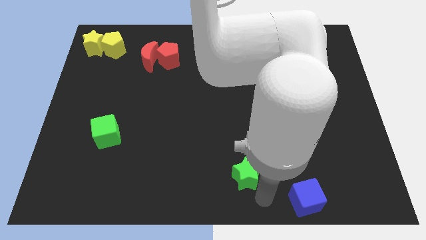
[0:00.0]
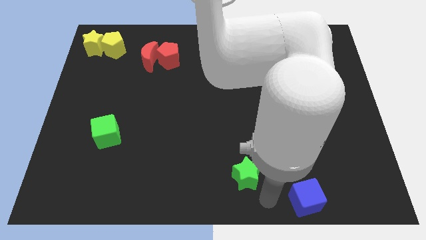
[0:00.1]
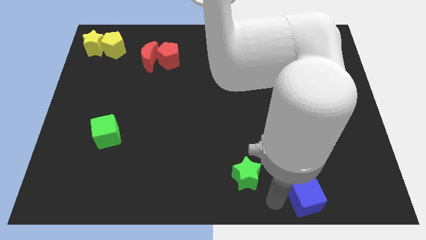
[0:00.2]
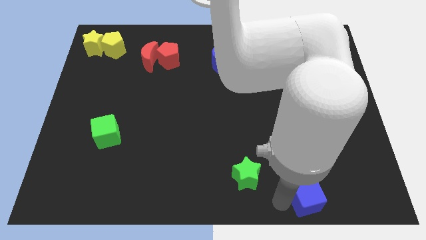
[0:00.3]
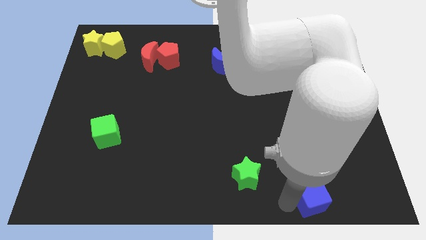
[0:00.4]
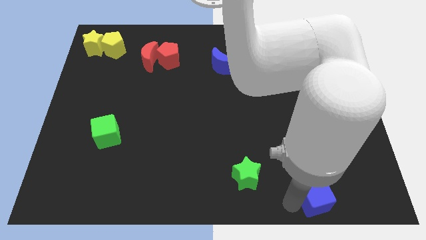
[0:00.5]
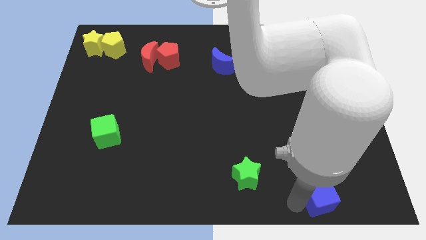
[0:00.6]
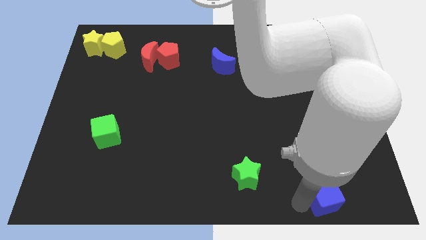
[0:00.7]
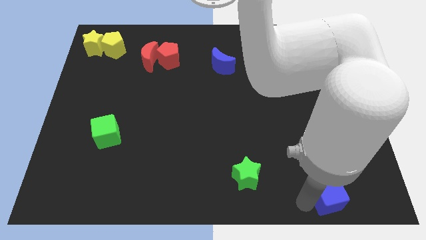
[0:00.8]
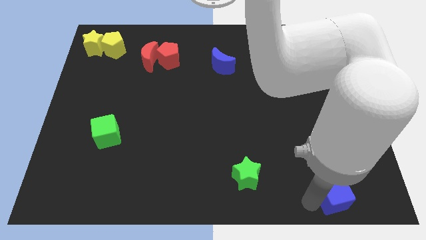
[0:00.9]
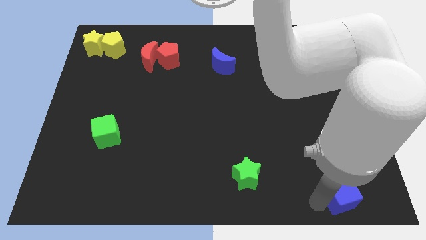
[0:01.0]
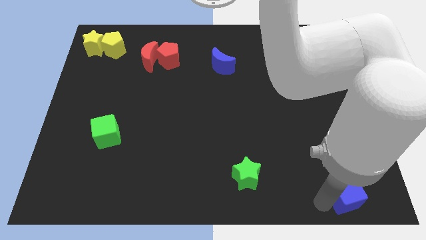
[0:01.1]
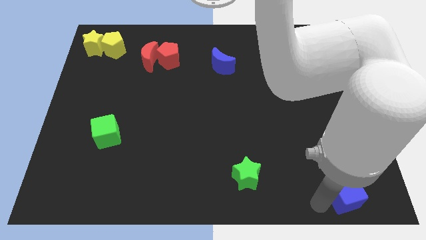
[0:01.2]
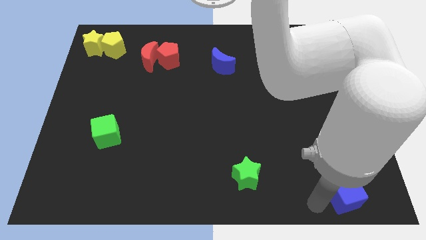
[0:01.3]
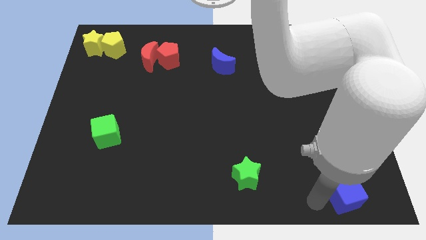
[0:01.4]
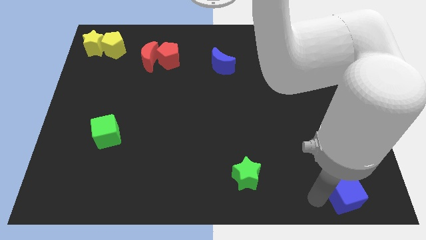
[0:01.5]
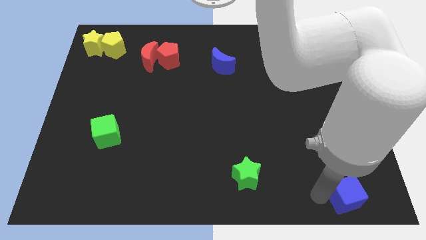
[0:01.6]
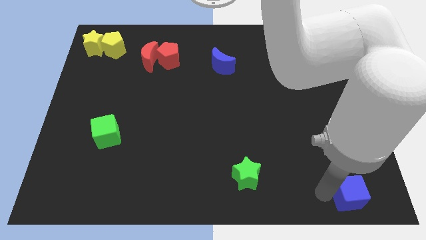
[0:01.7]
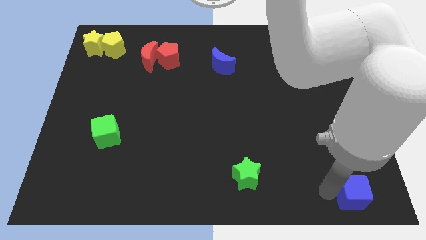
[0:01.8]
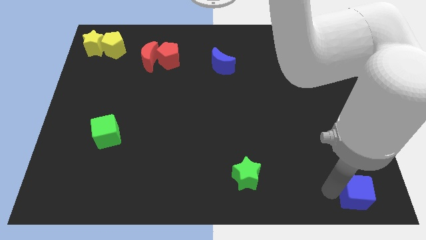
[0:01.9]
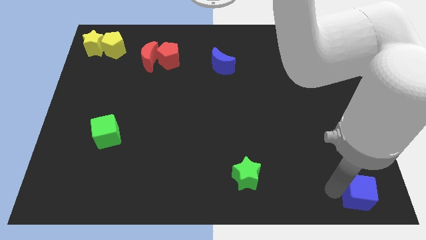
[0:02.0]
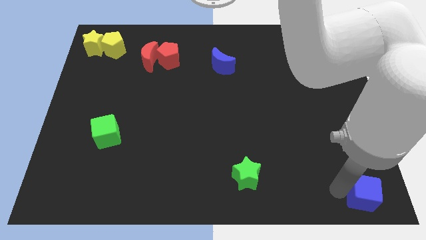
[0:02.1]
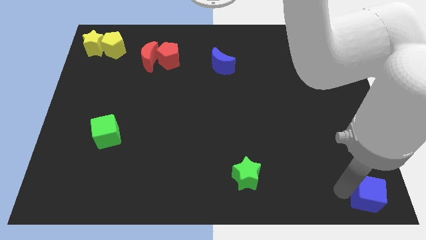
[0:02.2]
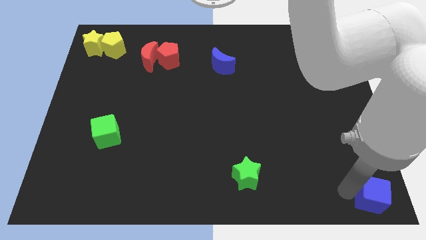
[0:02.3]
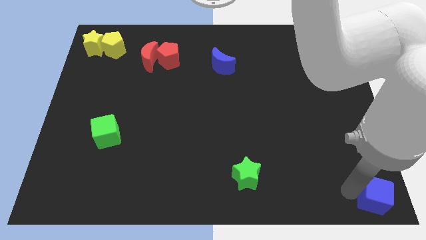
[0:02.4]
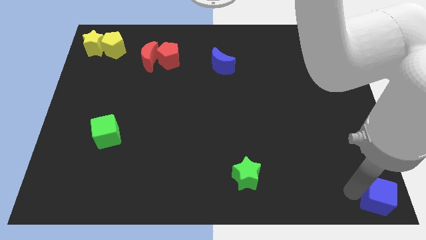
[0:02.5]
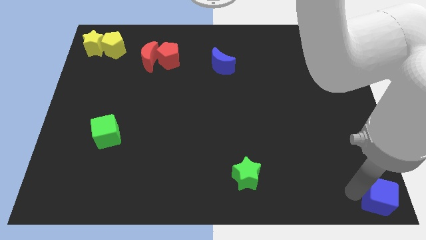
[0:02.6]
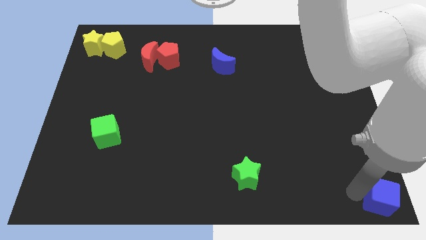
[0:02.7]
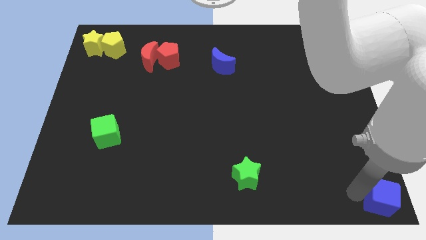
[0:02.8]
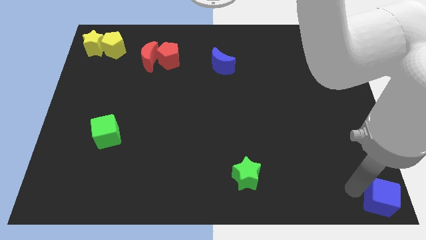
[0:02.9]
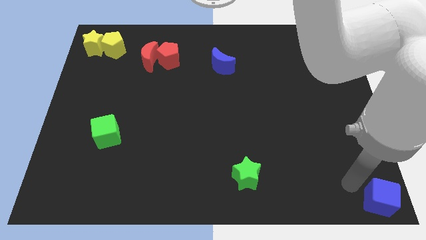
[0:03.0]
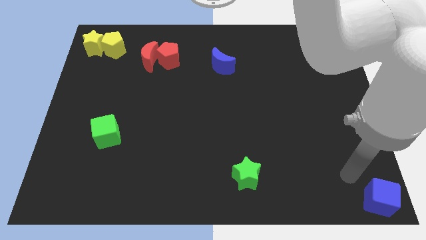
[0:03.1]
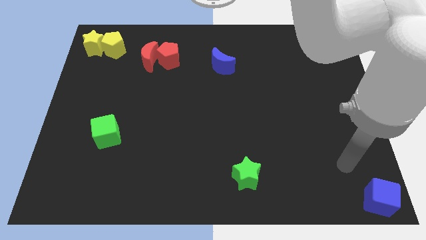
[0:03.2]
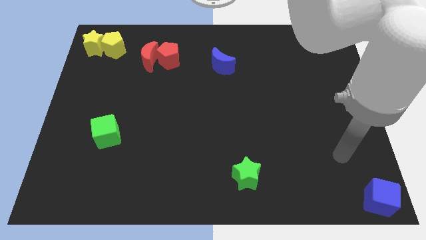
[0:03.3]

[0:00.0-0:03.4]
place blue cube to the bottom right corner of the board

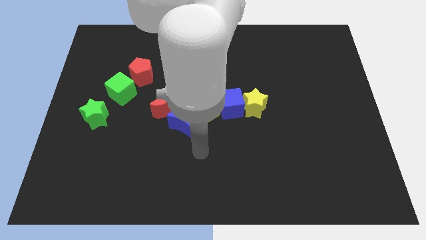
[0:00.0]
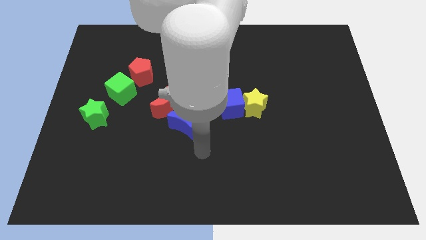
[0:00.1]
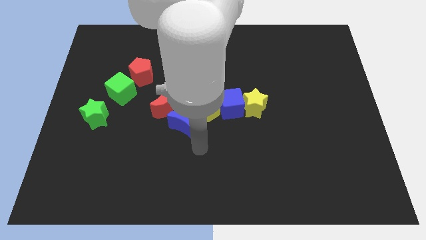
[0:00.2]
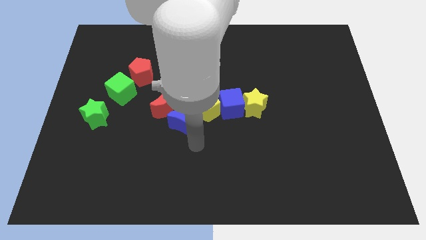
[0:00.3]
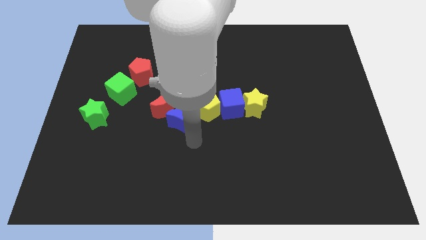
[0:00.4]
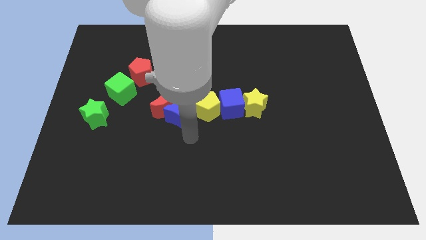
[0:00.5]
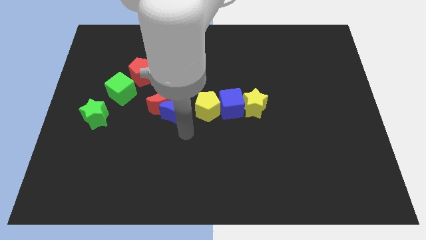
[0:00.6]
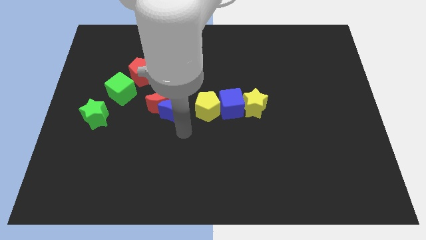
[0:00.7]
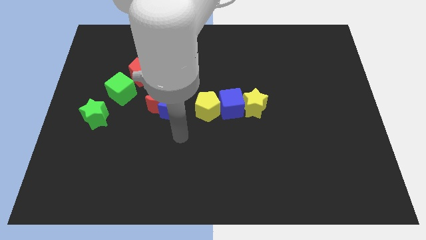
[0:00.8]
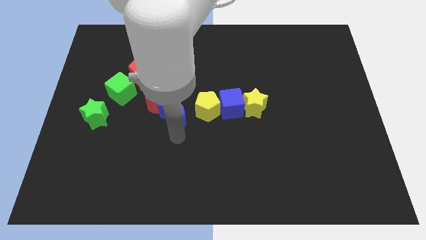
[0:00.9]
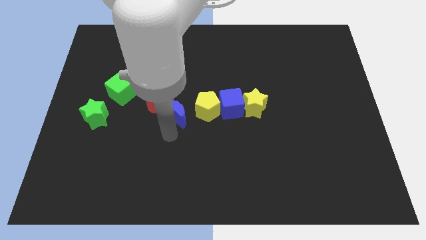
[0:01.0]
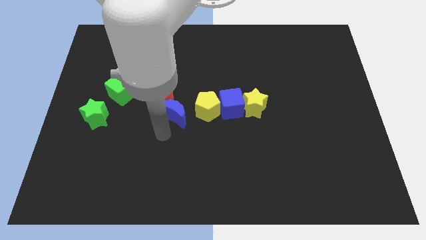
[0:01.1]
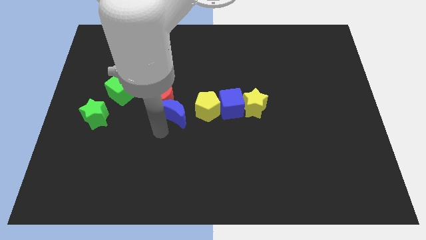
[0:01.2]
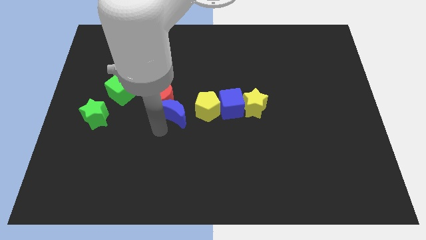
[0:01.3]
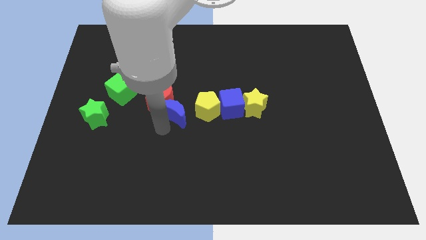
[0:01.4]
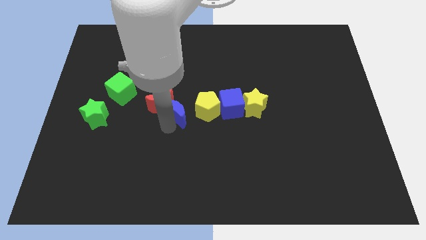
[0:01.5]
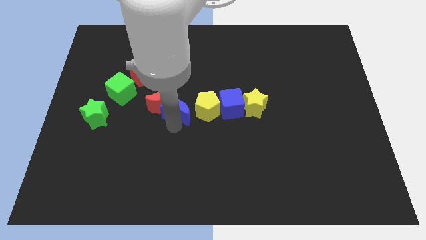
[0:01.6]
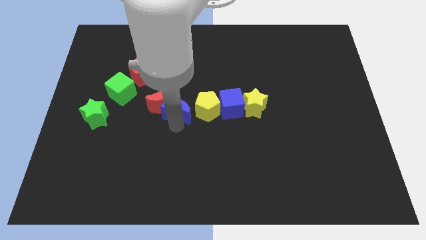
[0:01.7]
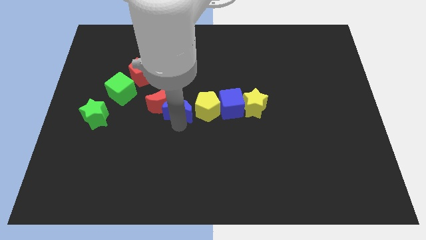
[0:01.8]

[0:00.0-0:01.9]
push the blue crescent into the red crescent

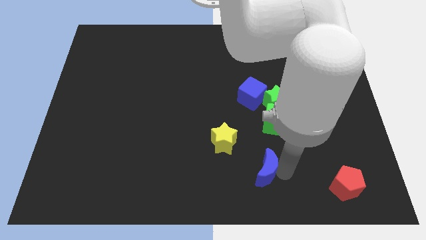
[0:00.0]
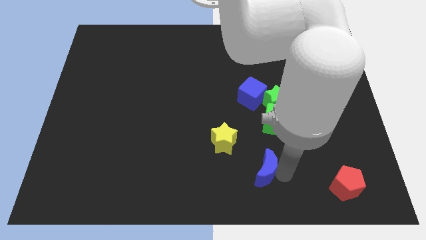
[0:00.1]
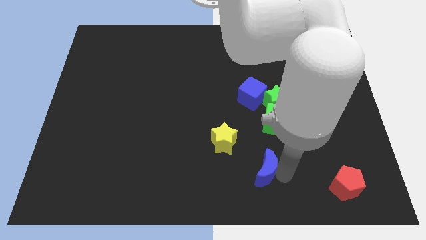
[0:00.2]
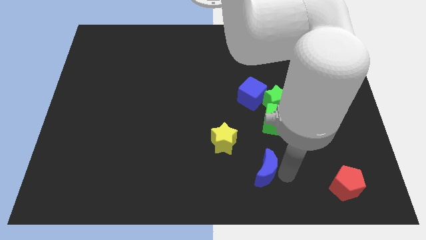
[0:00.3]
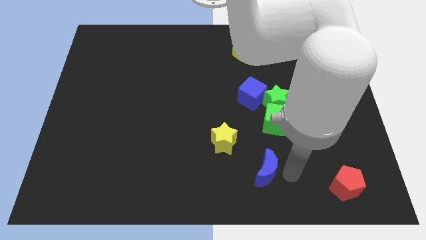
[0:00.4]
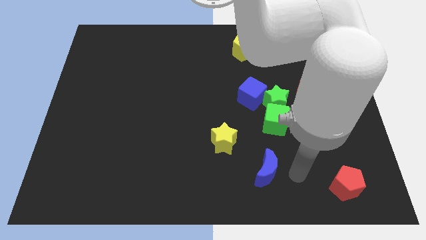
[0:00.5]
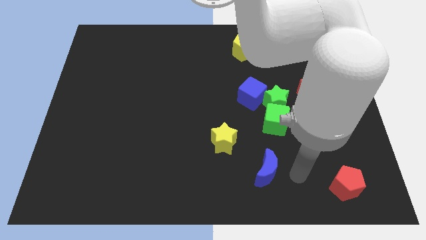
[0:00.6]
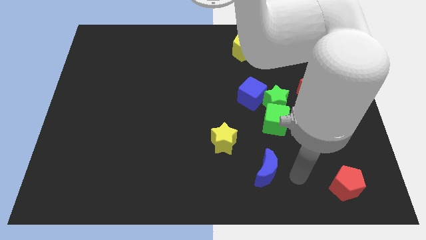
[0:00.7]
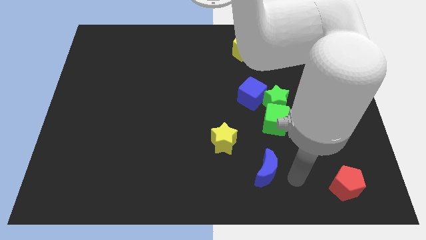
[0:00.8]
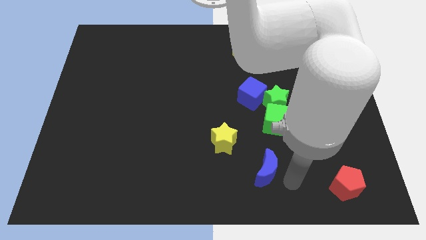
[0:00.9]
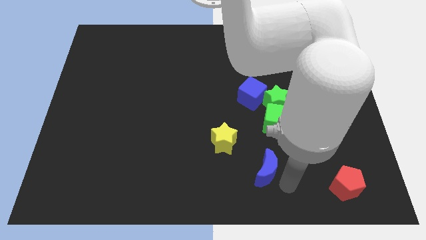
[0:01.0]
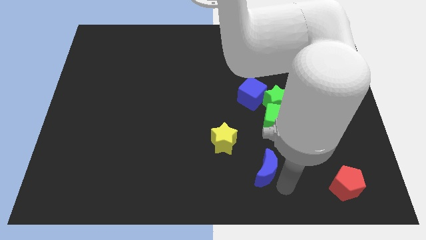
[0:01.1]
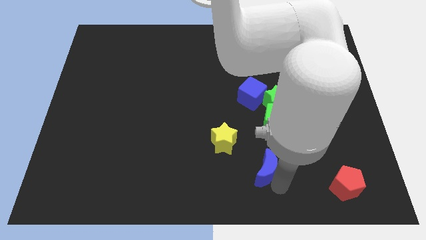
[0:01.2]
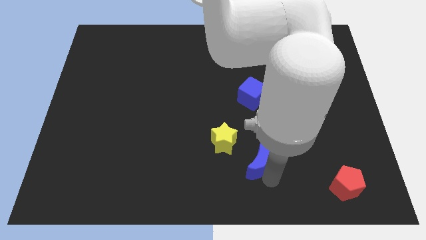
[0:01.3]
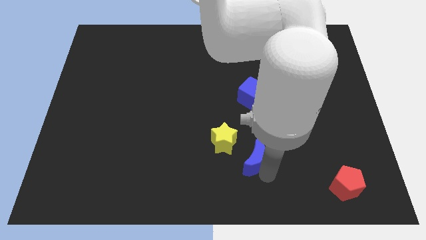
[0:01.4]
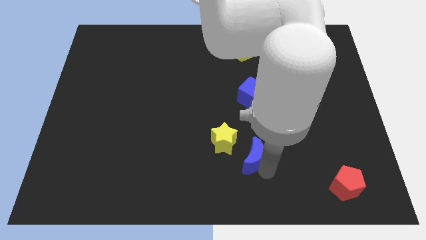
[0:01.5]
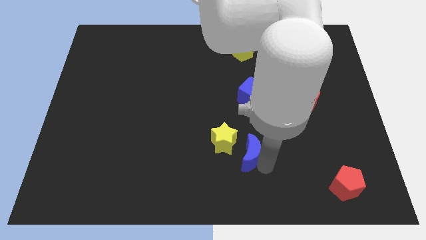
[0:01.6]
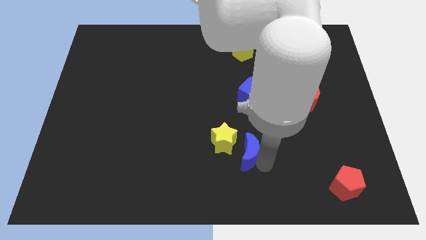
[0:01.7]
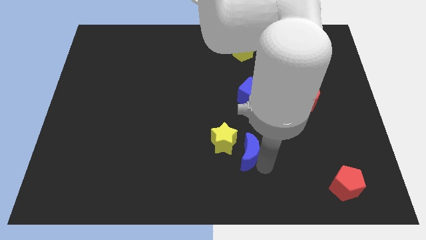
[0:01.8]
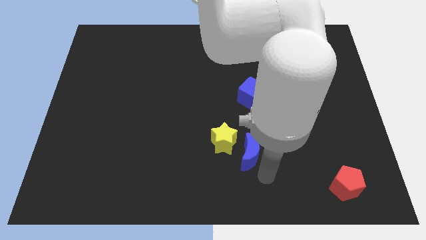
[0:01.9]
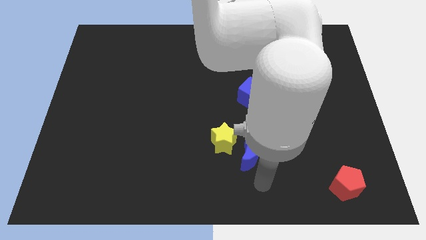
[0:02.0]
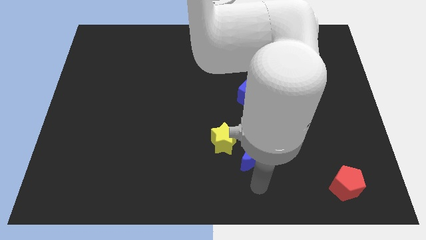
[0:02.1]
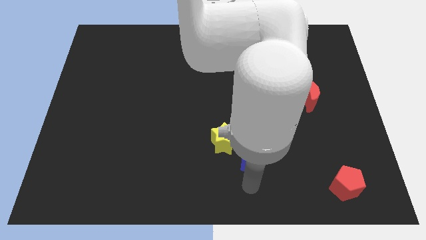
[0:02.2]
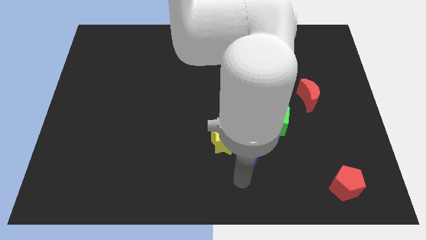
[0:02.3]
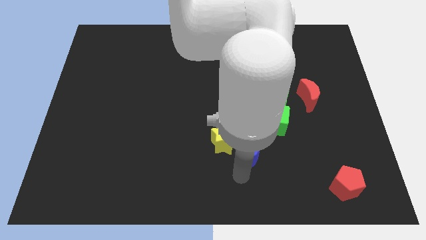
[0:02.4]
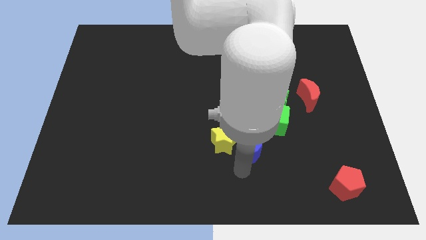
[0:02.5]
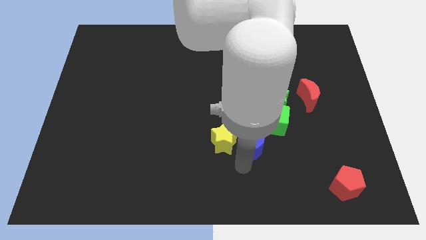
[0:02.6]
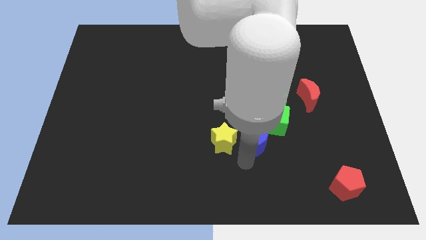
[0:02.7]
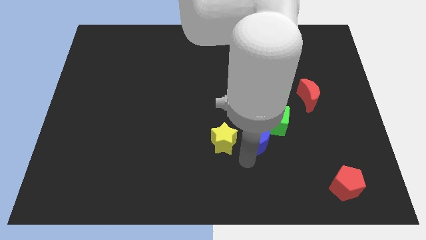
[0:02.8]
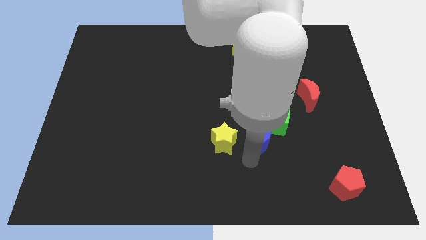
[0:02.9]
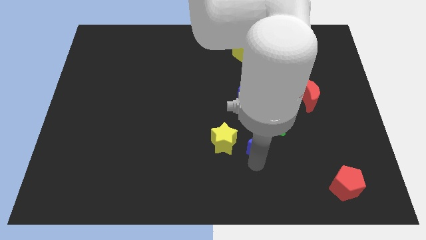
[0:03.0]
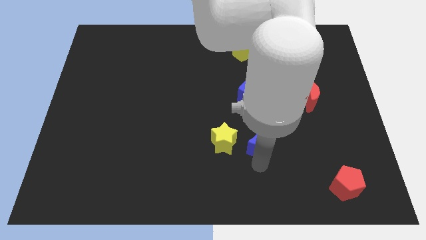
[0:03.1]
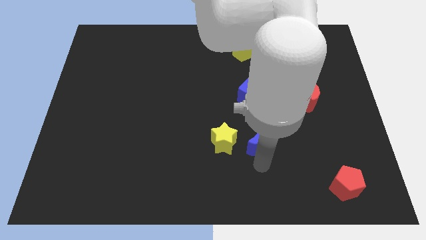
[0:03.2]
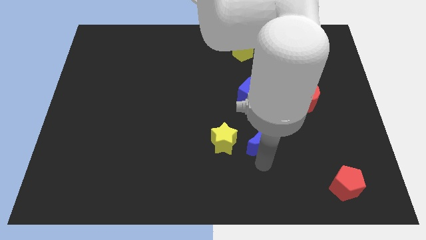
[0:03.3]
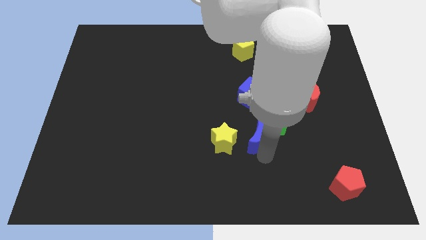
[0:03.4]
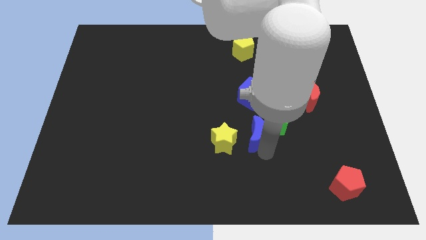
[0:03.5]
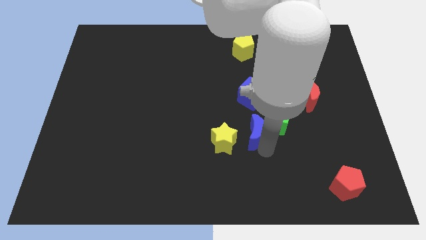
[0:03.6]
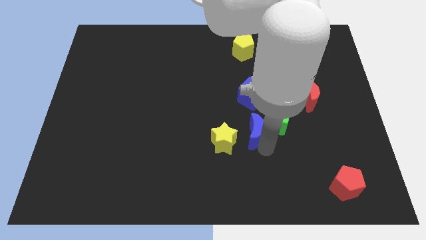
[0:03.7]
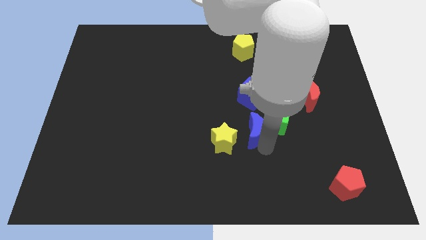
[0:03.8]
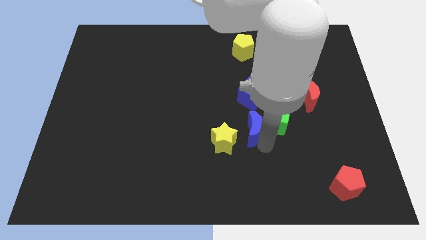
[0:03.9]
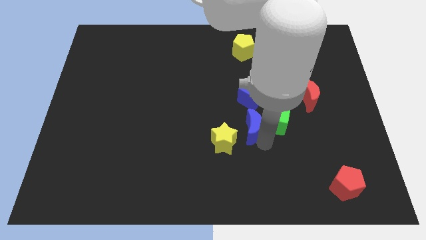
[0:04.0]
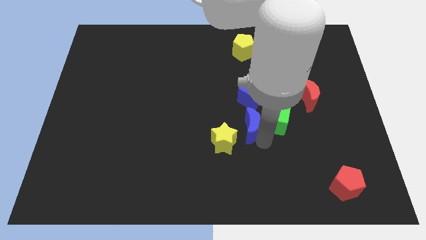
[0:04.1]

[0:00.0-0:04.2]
move blue crescent below the blue cube
